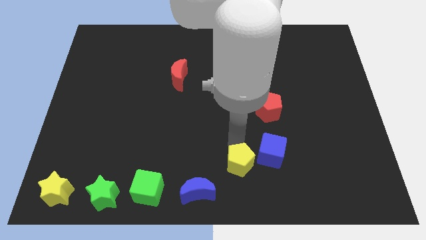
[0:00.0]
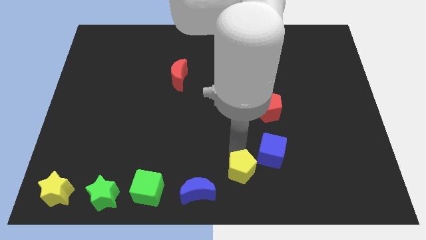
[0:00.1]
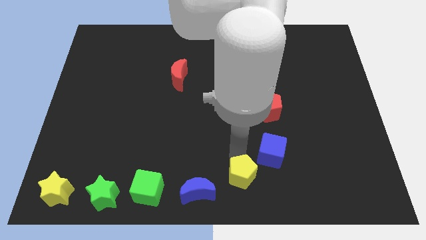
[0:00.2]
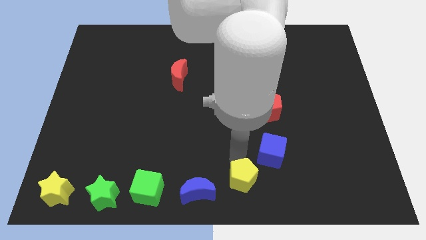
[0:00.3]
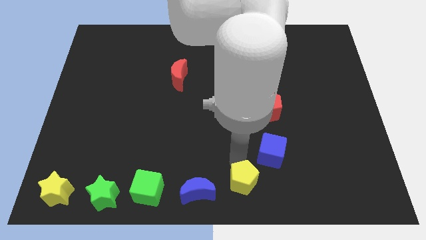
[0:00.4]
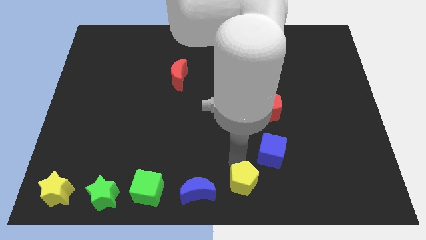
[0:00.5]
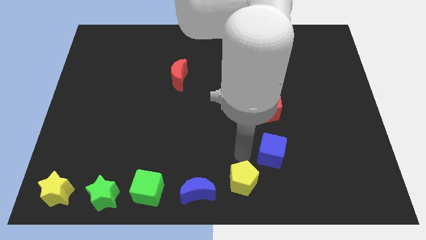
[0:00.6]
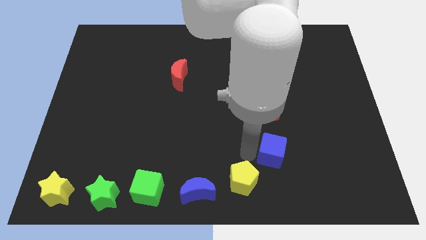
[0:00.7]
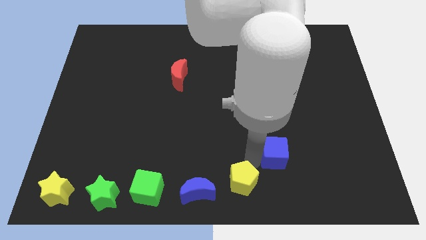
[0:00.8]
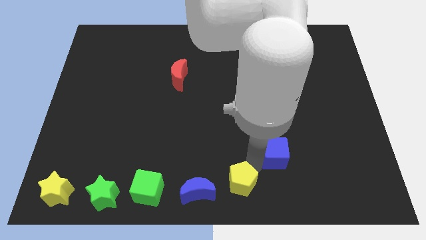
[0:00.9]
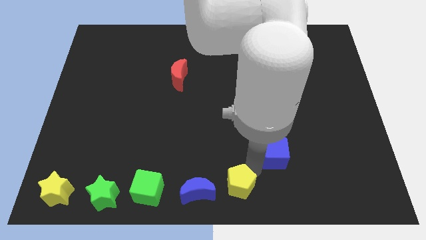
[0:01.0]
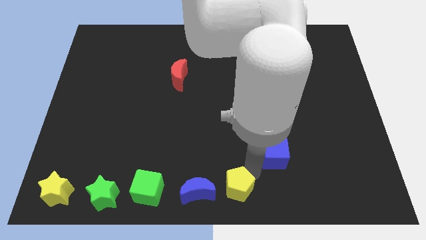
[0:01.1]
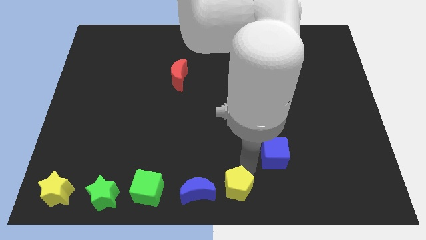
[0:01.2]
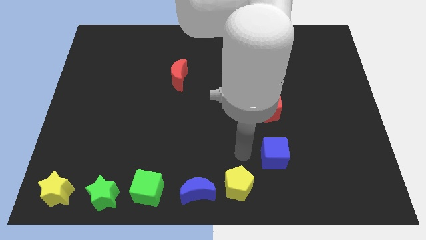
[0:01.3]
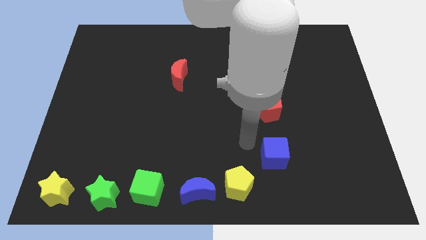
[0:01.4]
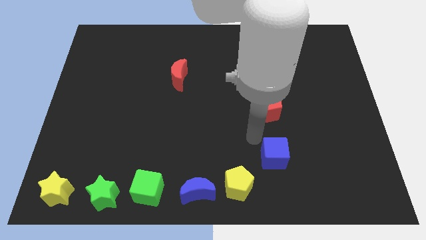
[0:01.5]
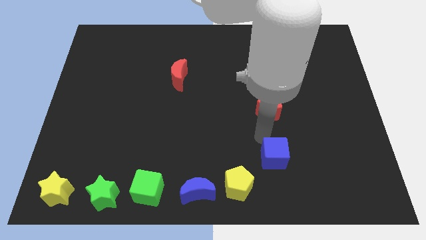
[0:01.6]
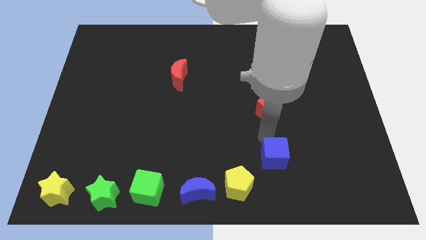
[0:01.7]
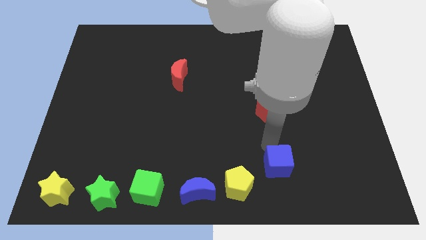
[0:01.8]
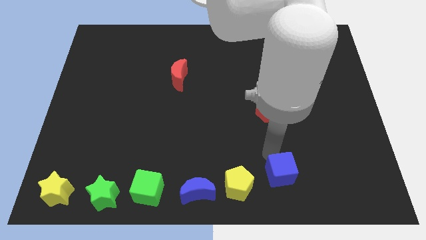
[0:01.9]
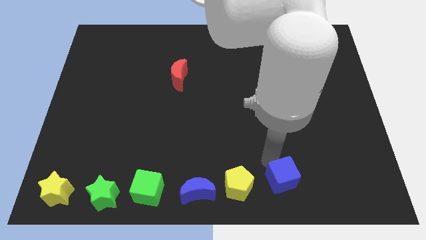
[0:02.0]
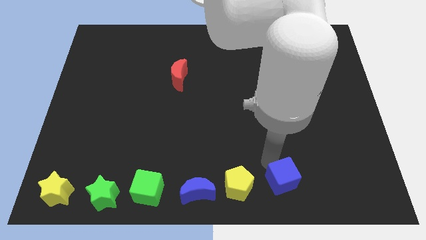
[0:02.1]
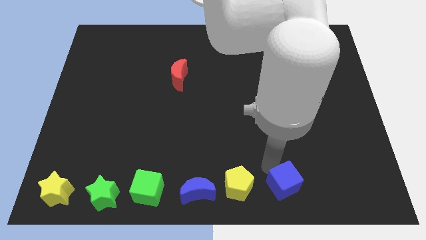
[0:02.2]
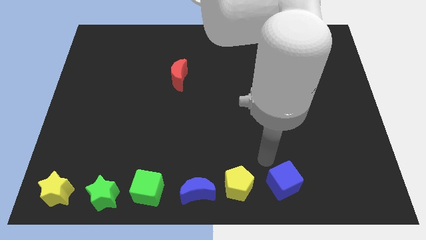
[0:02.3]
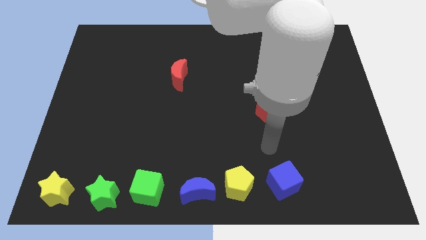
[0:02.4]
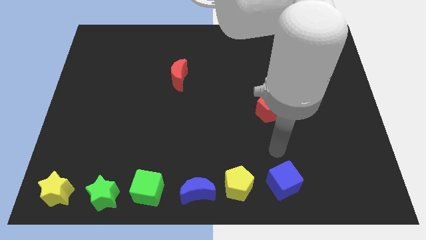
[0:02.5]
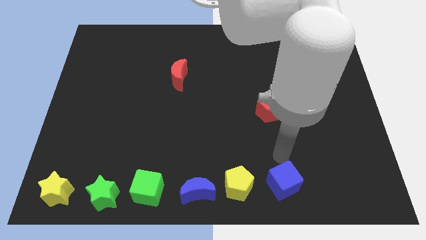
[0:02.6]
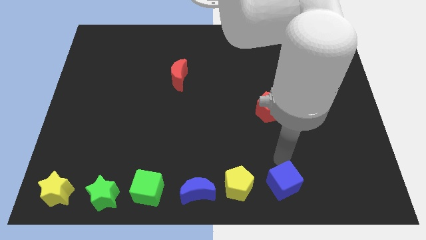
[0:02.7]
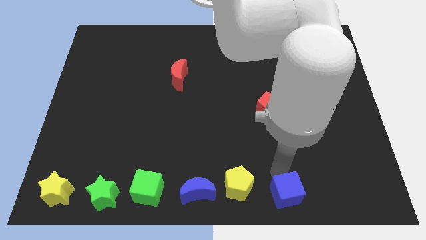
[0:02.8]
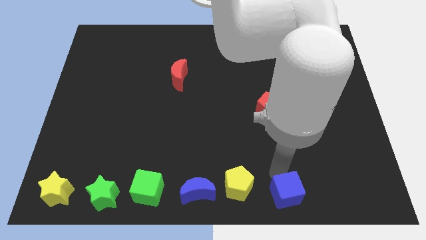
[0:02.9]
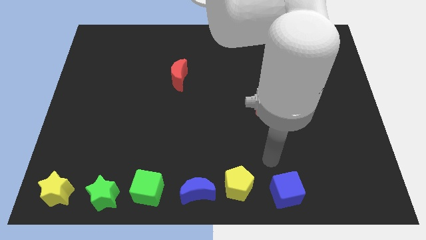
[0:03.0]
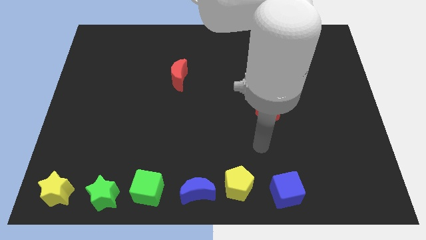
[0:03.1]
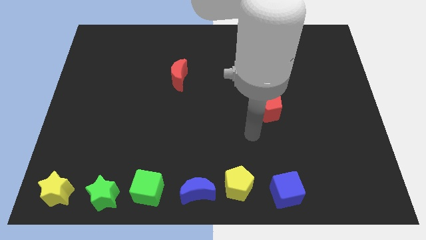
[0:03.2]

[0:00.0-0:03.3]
move yellow pentagon along with blue cube to bottom center

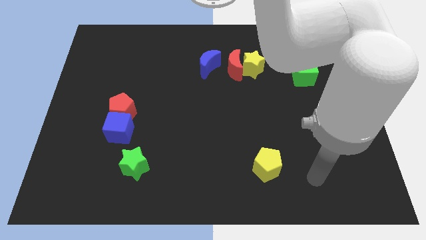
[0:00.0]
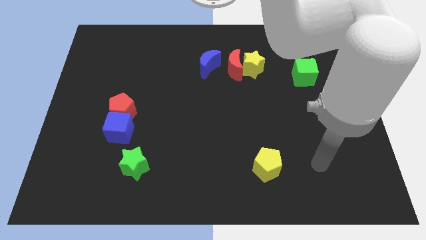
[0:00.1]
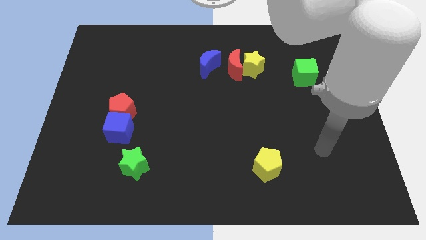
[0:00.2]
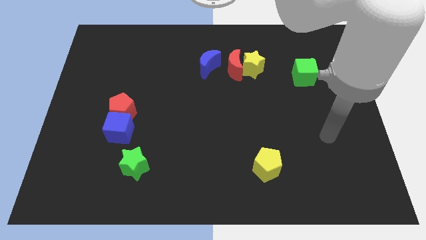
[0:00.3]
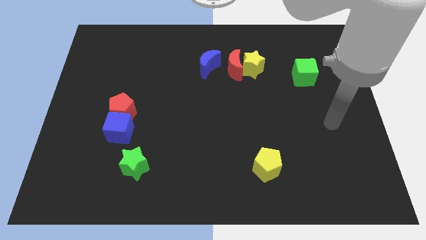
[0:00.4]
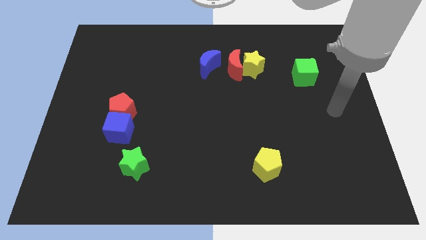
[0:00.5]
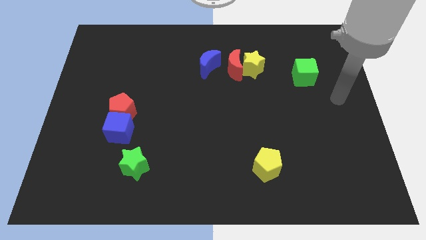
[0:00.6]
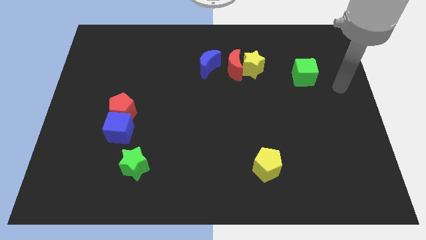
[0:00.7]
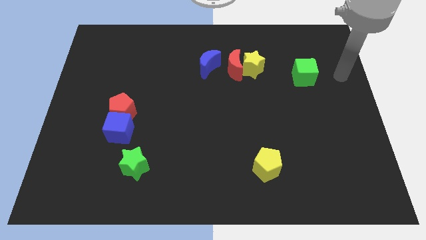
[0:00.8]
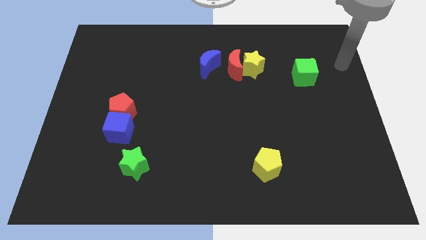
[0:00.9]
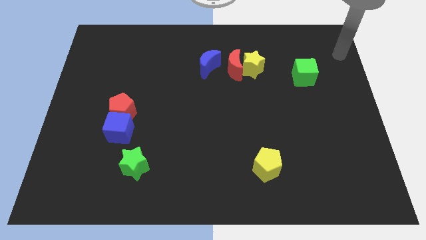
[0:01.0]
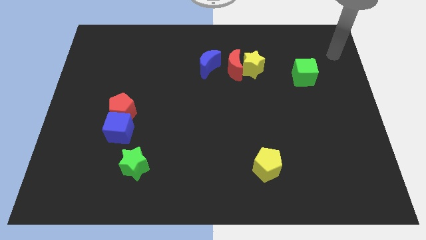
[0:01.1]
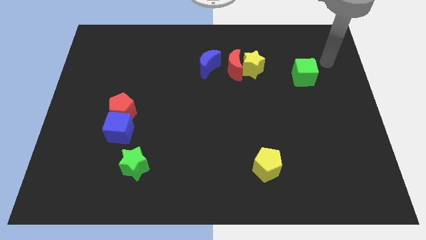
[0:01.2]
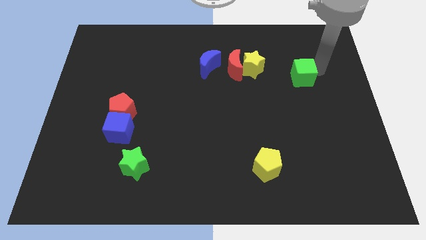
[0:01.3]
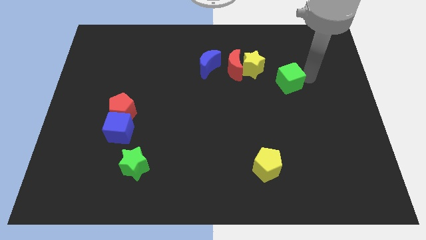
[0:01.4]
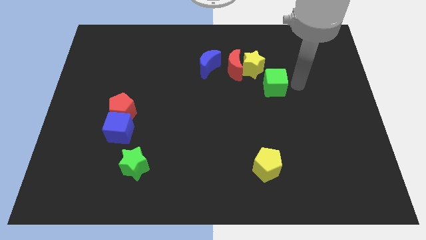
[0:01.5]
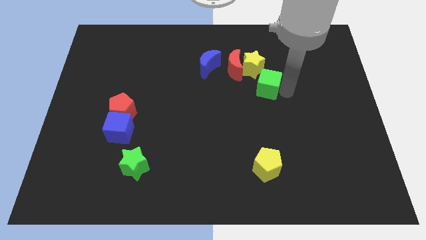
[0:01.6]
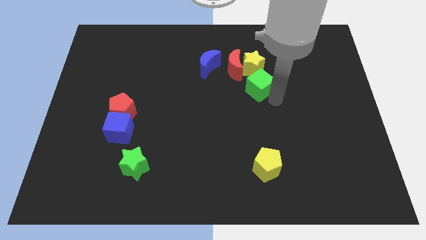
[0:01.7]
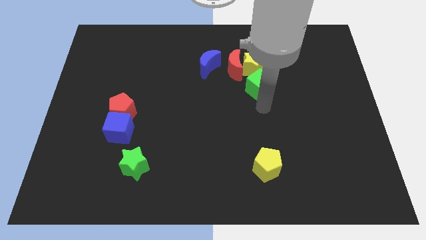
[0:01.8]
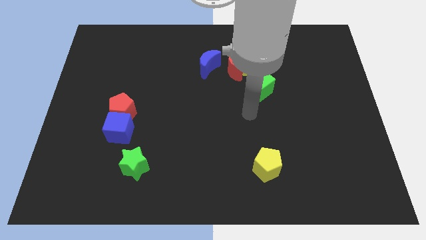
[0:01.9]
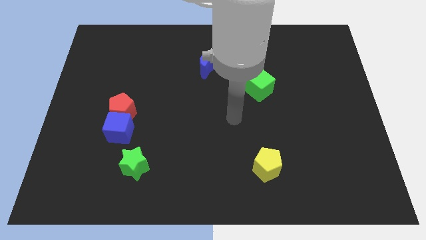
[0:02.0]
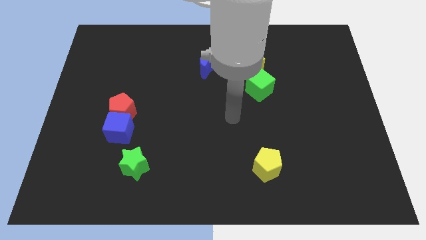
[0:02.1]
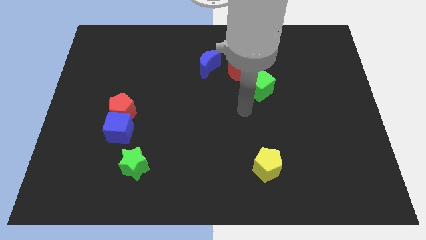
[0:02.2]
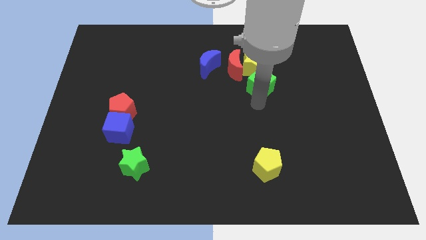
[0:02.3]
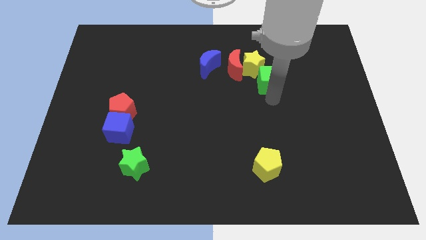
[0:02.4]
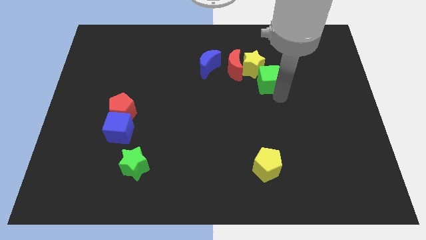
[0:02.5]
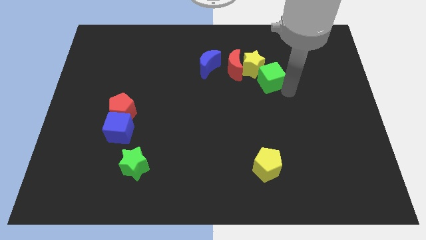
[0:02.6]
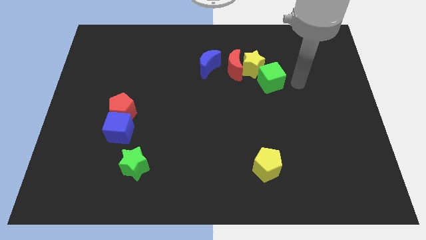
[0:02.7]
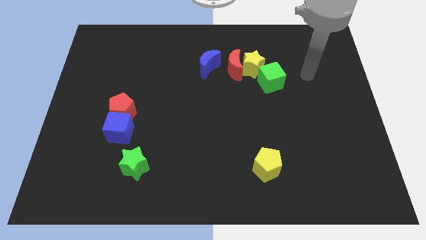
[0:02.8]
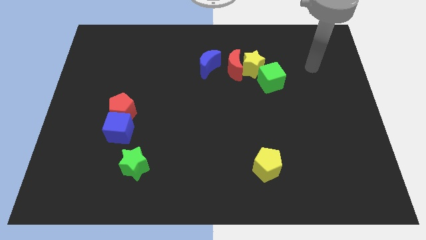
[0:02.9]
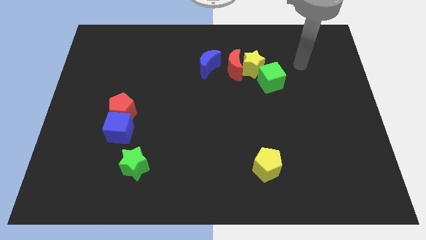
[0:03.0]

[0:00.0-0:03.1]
move green cube towards the yellow star

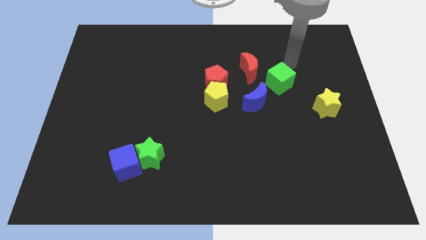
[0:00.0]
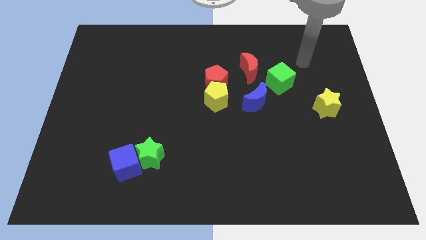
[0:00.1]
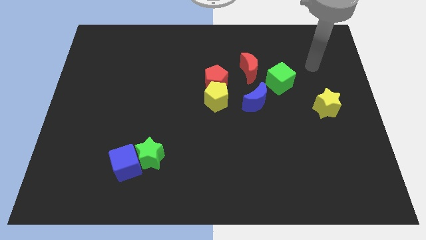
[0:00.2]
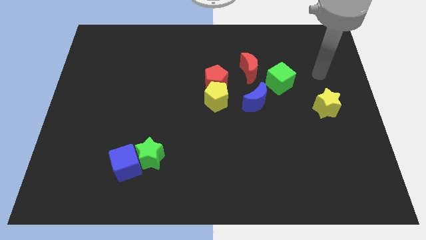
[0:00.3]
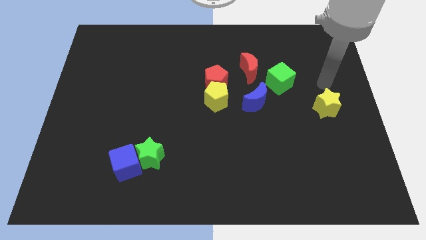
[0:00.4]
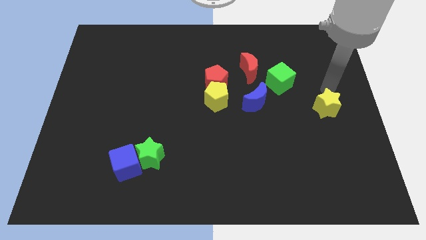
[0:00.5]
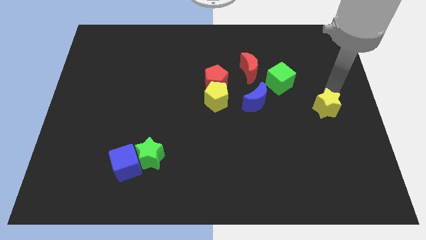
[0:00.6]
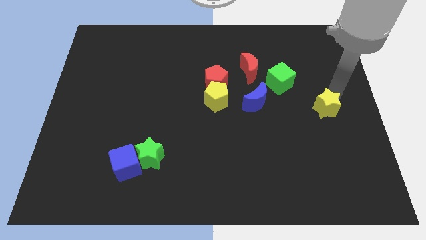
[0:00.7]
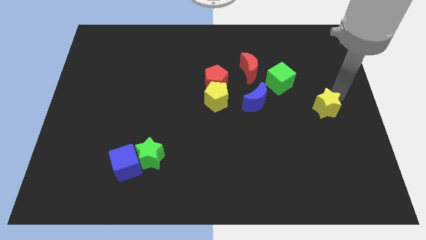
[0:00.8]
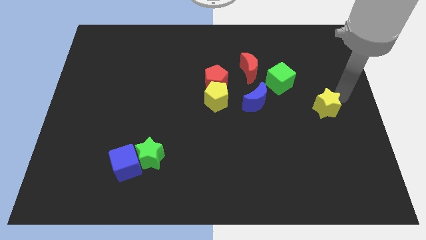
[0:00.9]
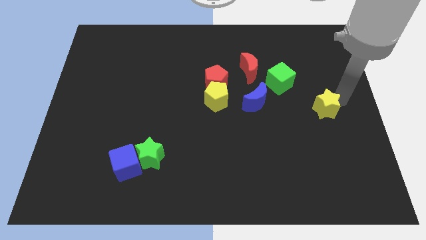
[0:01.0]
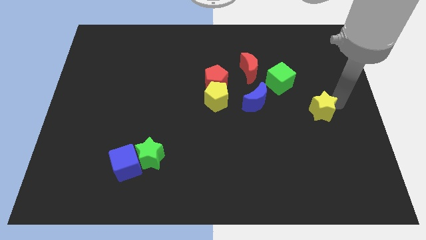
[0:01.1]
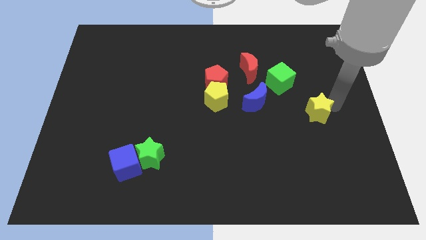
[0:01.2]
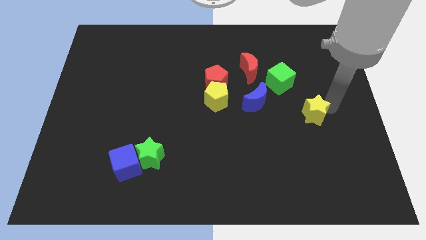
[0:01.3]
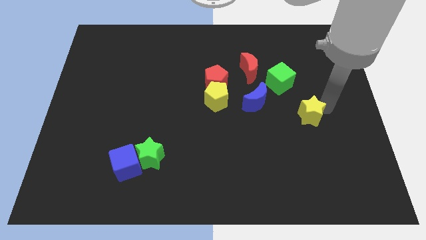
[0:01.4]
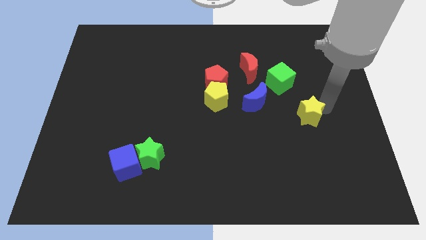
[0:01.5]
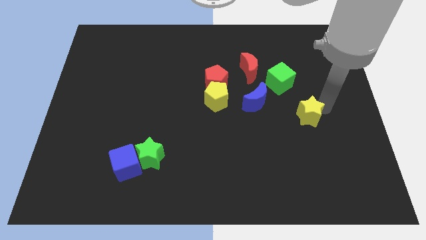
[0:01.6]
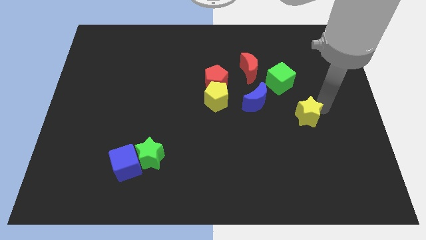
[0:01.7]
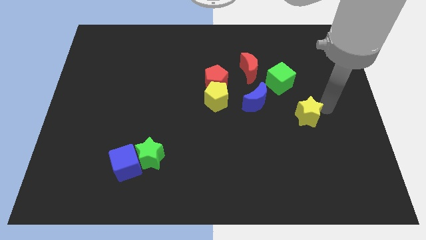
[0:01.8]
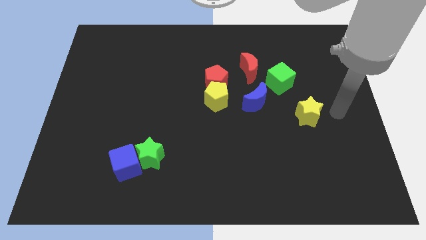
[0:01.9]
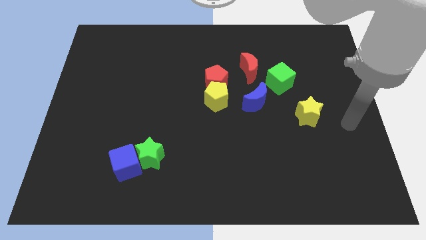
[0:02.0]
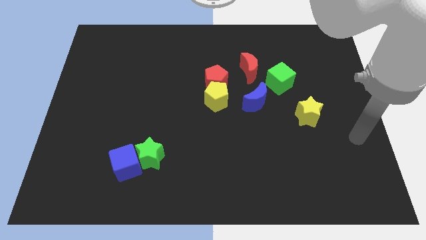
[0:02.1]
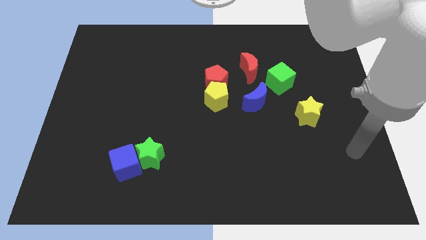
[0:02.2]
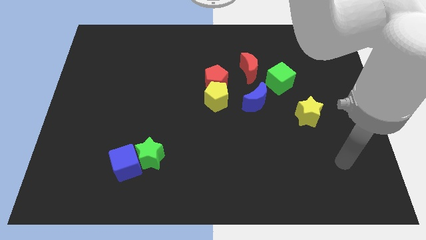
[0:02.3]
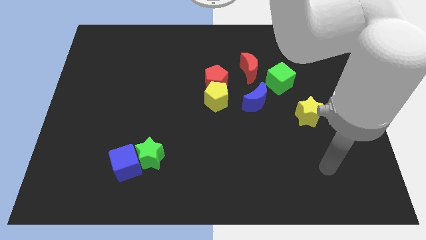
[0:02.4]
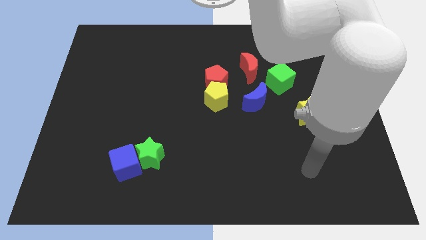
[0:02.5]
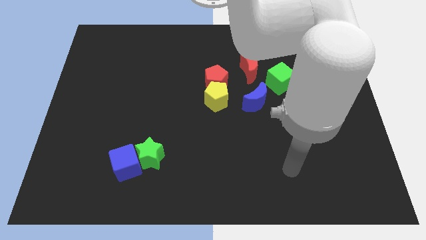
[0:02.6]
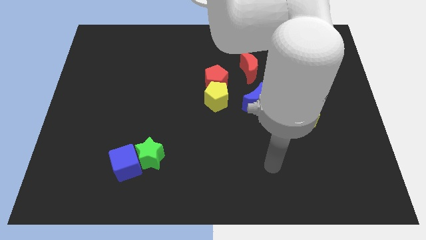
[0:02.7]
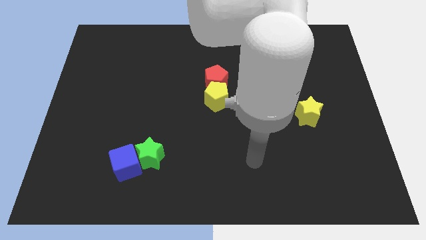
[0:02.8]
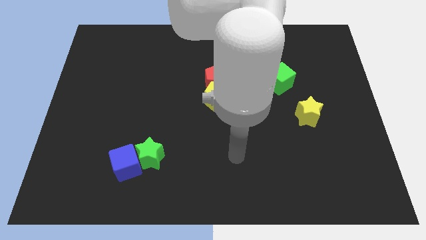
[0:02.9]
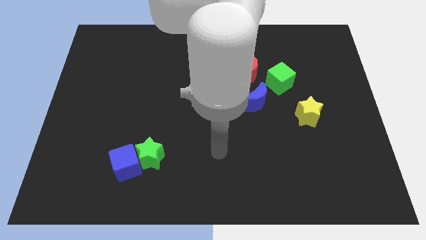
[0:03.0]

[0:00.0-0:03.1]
push the yellow star towards the bottom right to the green cube
